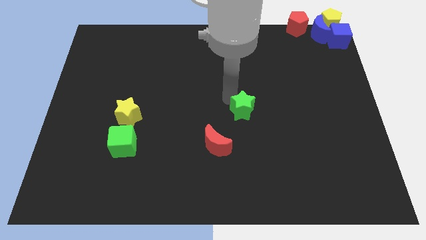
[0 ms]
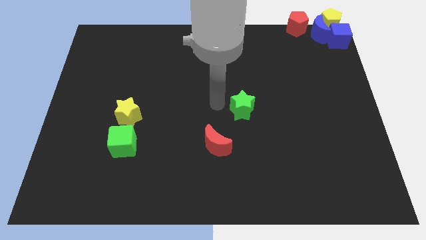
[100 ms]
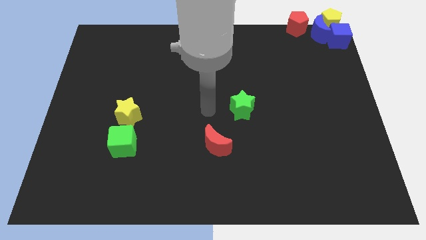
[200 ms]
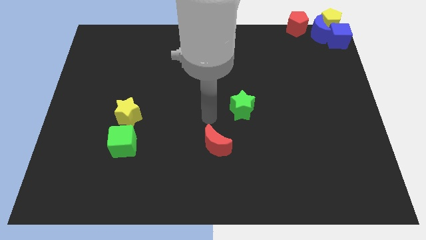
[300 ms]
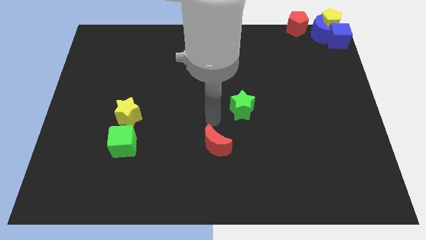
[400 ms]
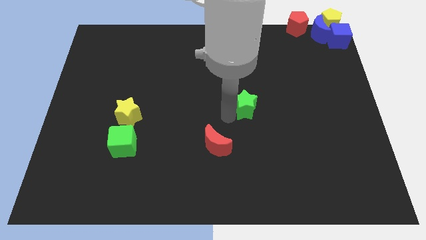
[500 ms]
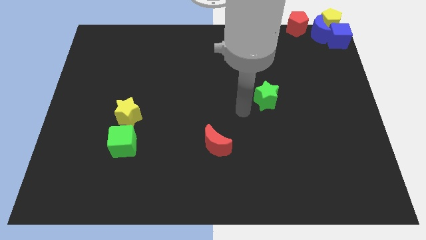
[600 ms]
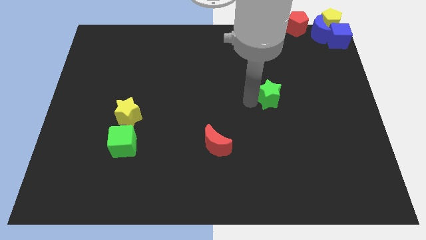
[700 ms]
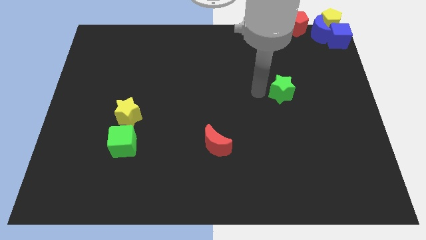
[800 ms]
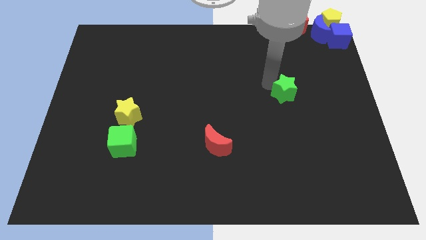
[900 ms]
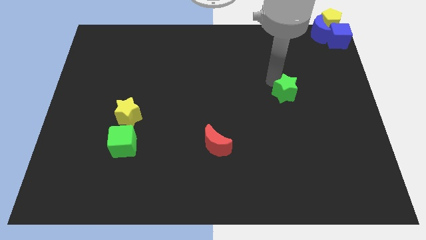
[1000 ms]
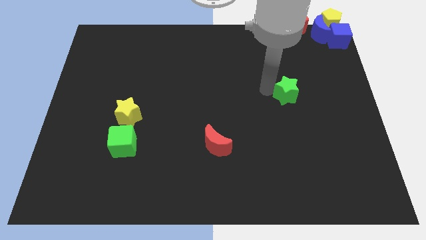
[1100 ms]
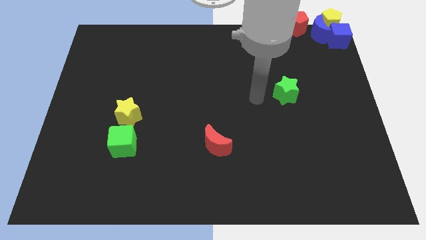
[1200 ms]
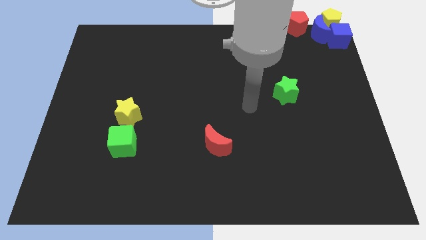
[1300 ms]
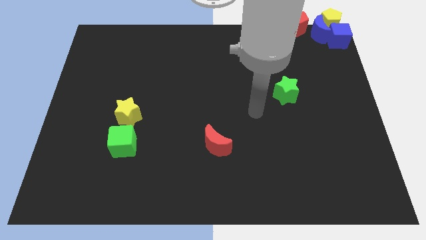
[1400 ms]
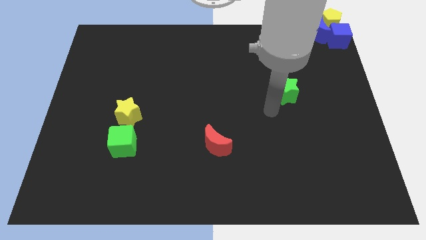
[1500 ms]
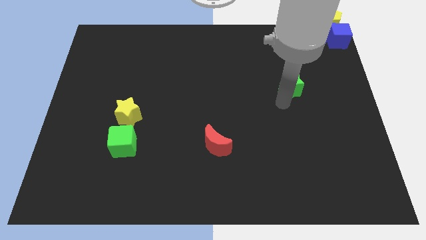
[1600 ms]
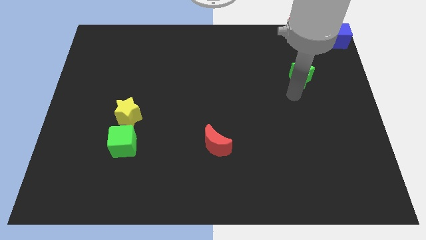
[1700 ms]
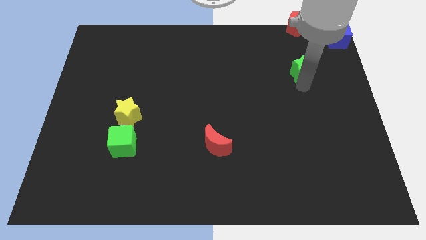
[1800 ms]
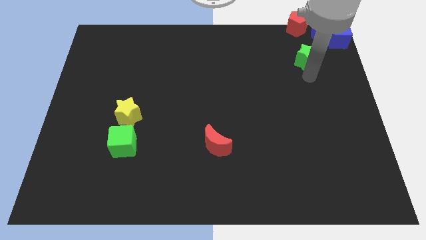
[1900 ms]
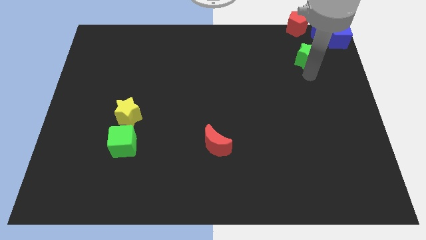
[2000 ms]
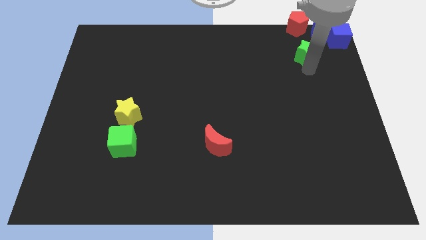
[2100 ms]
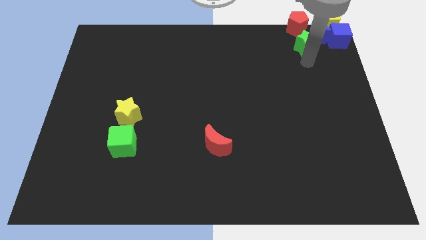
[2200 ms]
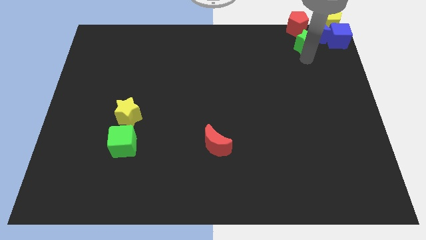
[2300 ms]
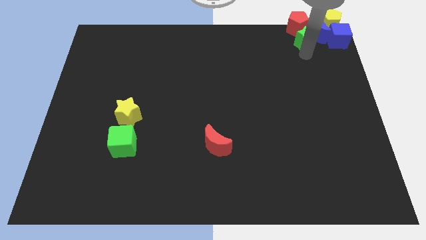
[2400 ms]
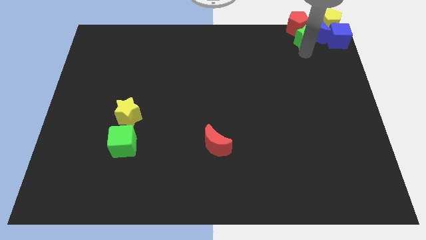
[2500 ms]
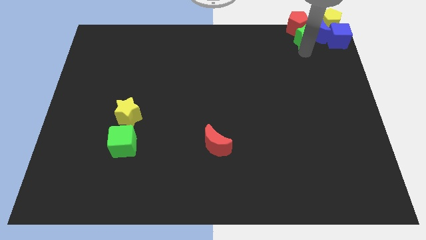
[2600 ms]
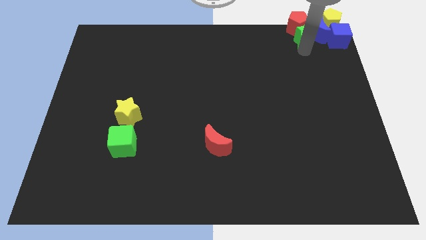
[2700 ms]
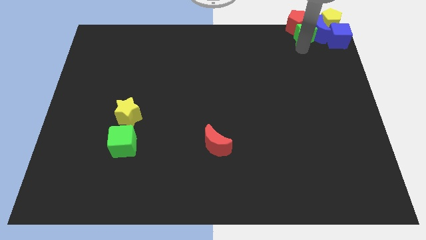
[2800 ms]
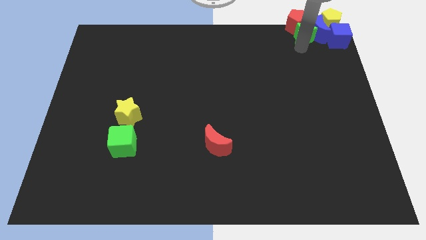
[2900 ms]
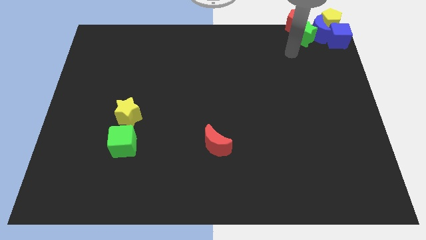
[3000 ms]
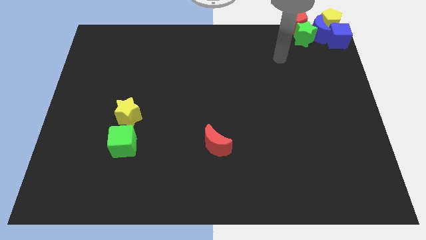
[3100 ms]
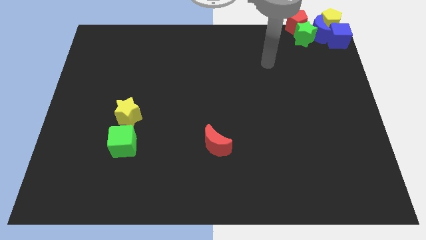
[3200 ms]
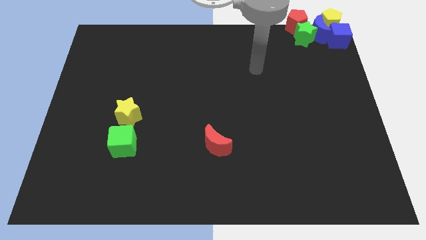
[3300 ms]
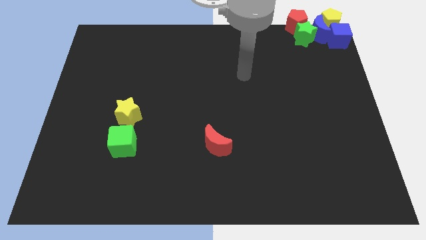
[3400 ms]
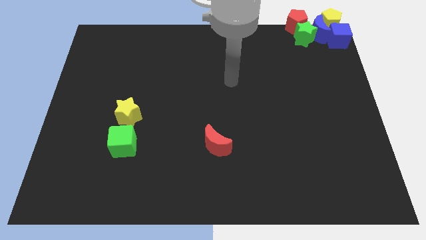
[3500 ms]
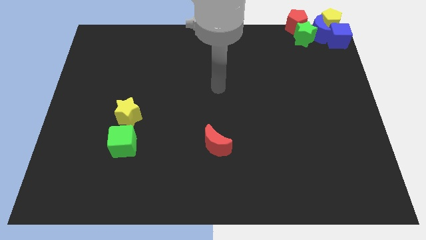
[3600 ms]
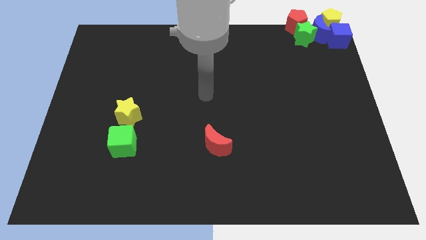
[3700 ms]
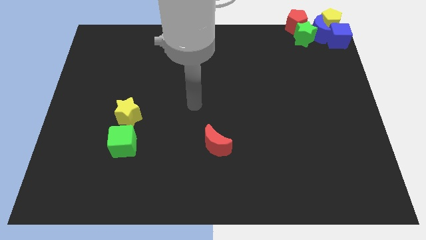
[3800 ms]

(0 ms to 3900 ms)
push the green star into a group of blocks

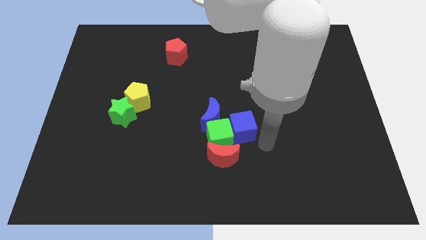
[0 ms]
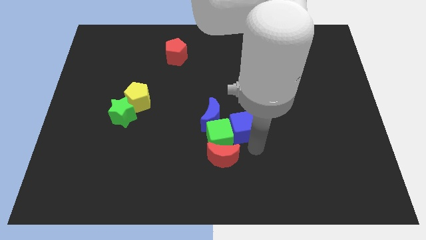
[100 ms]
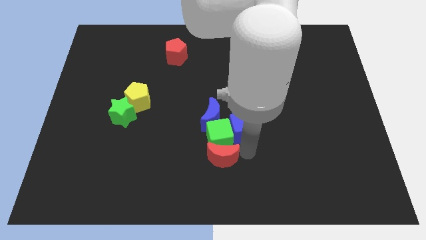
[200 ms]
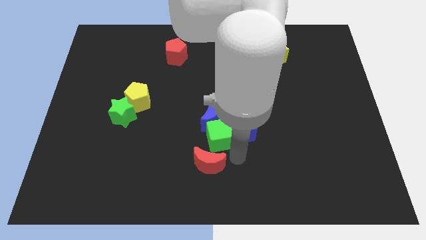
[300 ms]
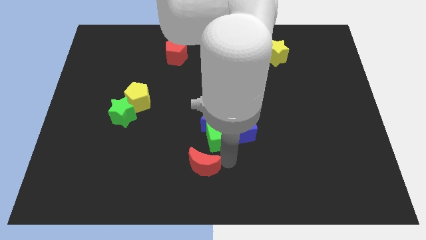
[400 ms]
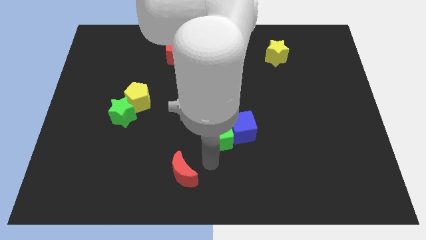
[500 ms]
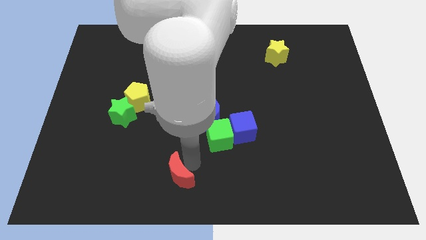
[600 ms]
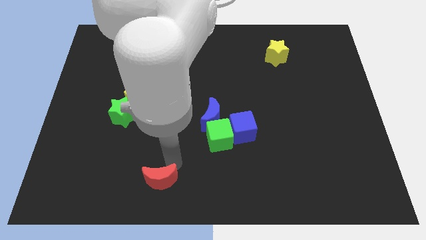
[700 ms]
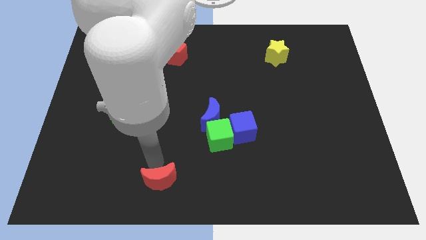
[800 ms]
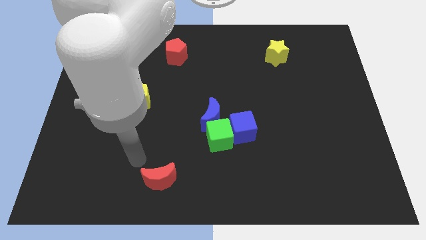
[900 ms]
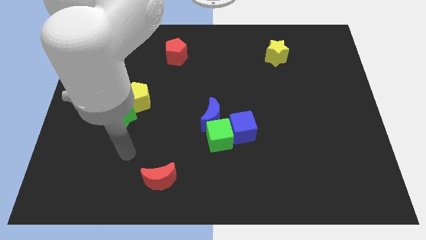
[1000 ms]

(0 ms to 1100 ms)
move the red crescent slightly towards the left

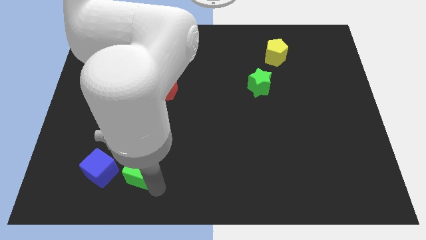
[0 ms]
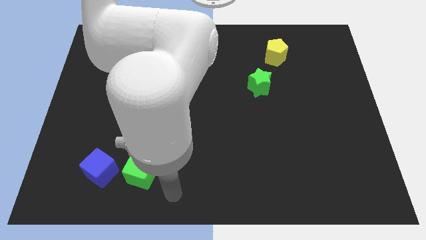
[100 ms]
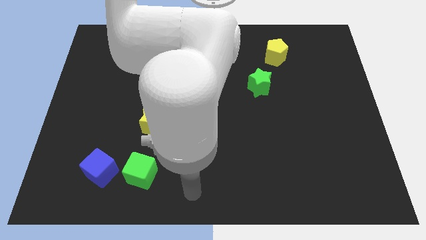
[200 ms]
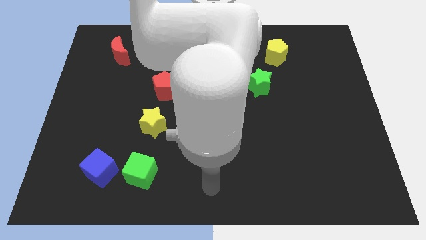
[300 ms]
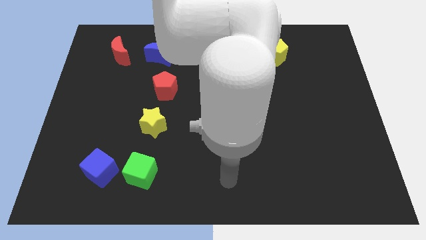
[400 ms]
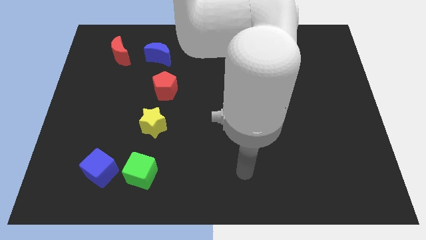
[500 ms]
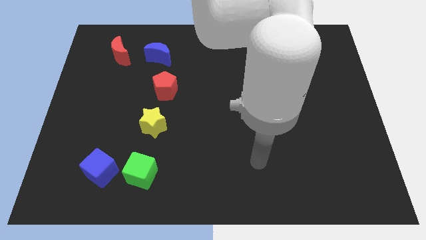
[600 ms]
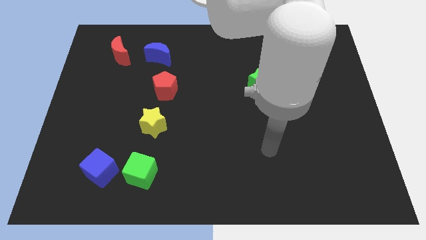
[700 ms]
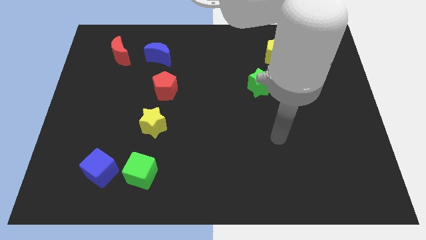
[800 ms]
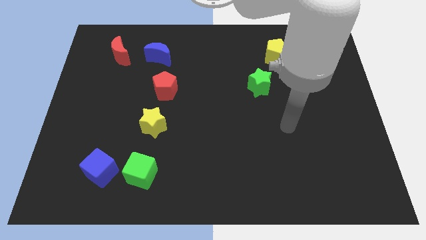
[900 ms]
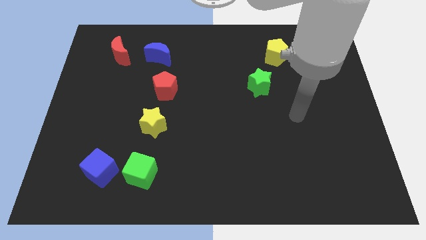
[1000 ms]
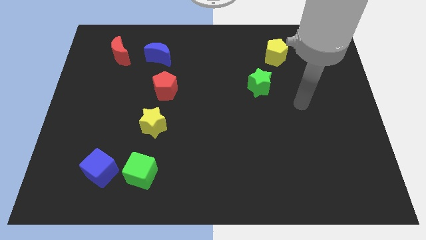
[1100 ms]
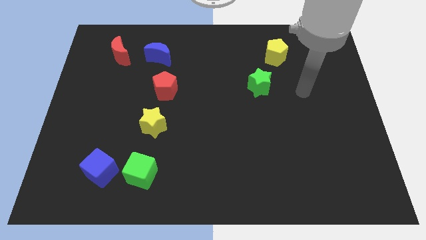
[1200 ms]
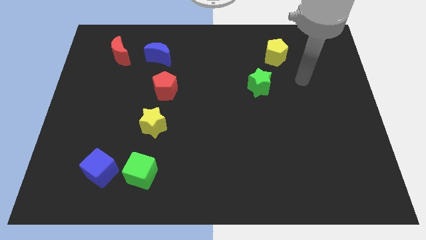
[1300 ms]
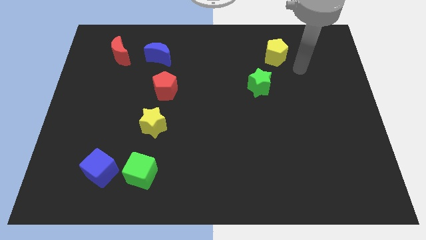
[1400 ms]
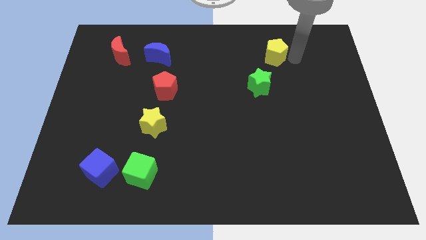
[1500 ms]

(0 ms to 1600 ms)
move your arm away from the green cube

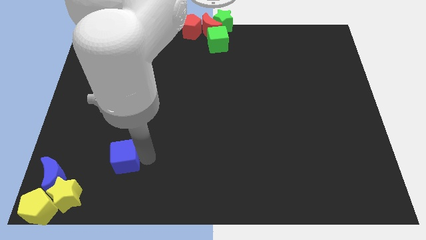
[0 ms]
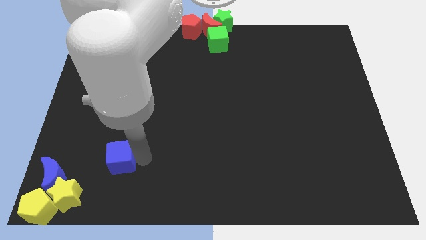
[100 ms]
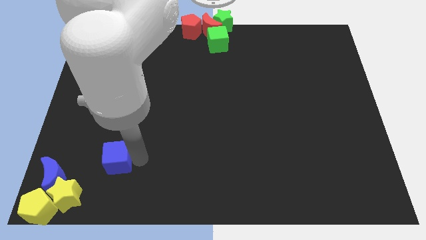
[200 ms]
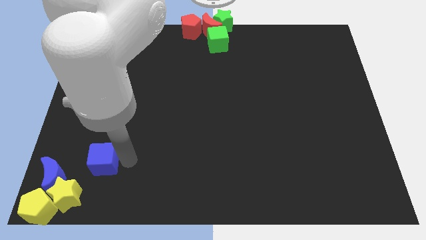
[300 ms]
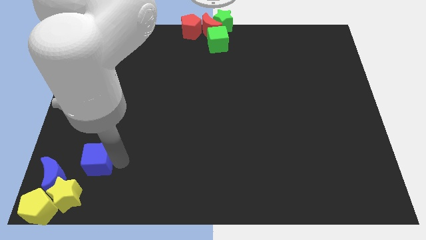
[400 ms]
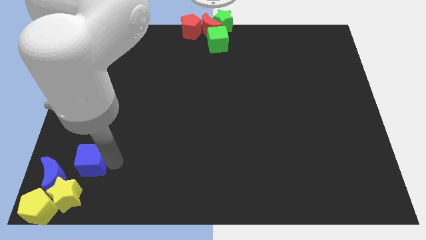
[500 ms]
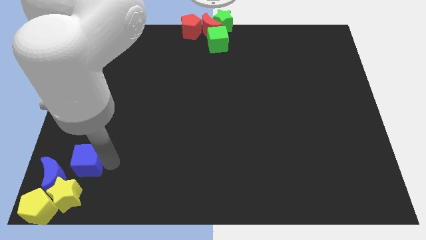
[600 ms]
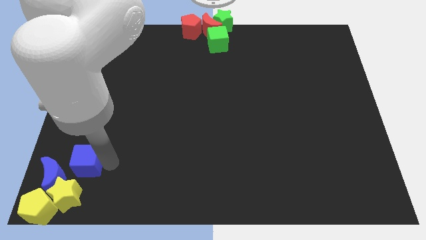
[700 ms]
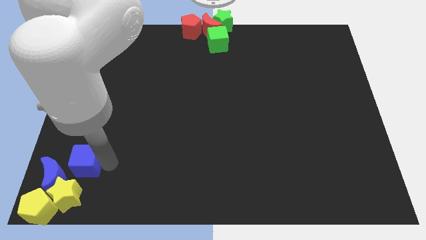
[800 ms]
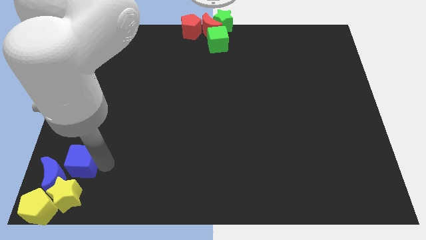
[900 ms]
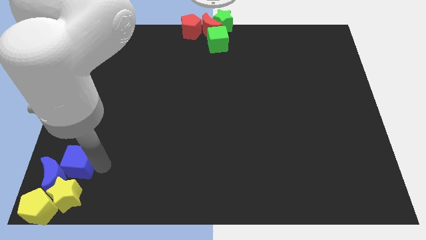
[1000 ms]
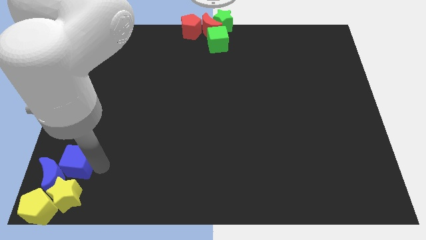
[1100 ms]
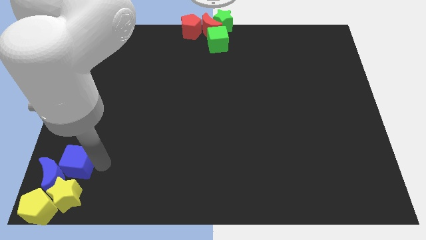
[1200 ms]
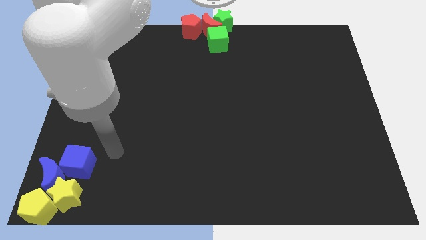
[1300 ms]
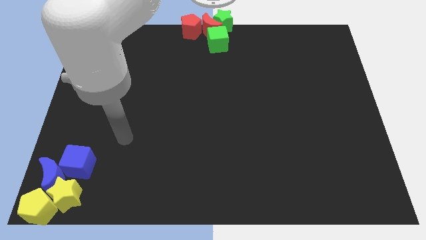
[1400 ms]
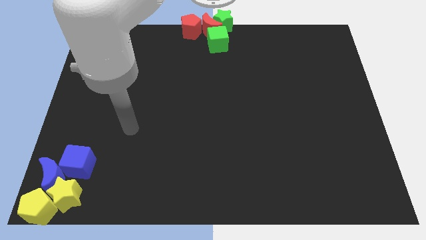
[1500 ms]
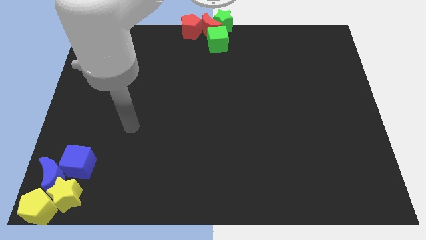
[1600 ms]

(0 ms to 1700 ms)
place the blue cube into the blue moon

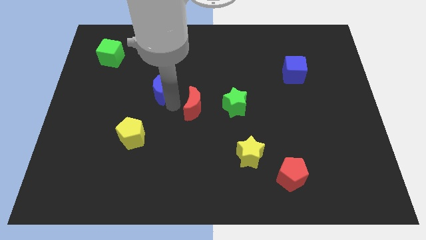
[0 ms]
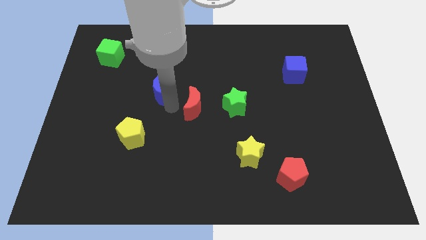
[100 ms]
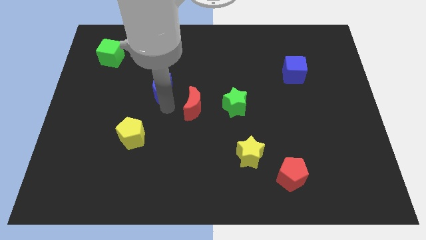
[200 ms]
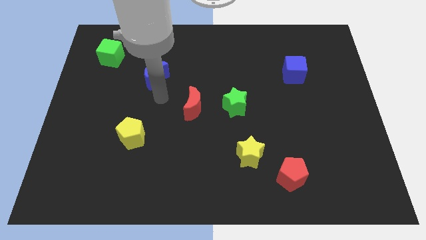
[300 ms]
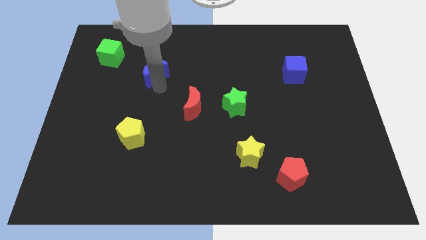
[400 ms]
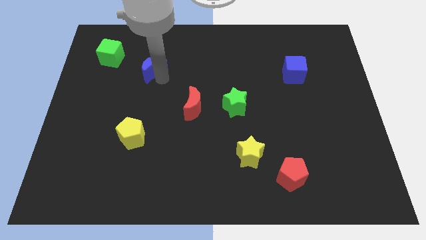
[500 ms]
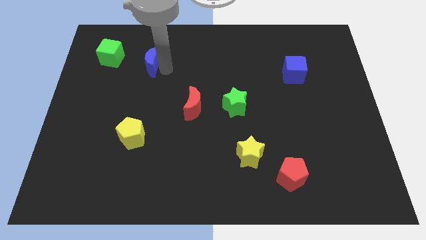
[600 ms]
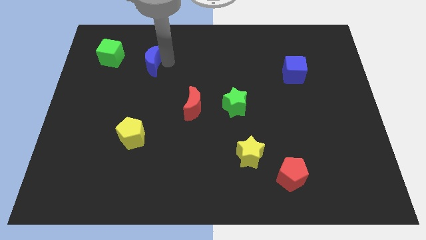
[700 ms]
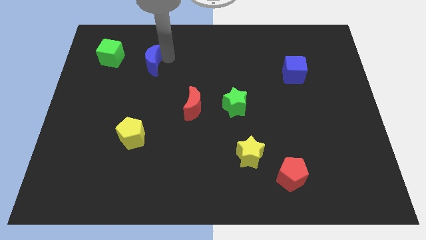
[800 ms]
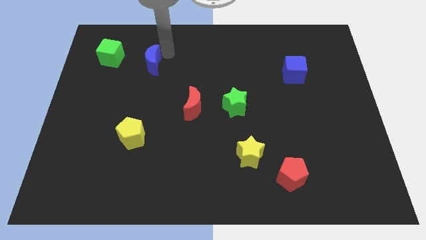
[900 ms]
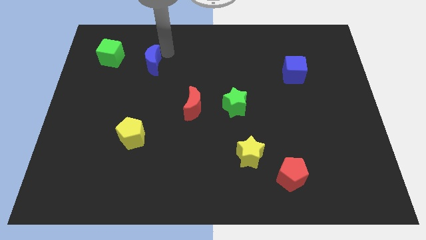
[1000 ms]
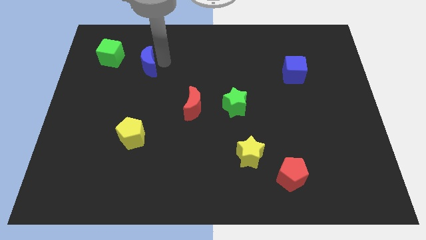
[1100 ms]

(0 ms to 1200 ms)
drag the blue moon parallel right to the green cube
